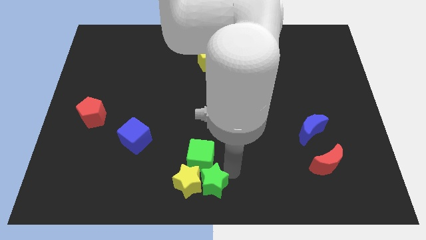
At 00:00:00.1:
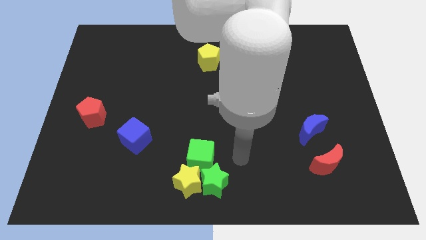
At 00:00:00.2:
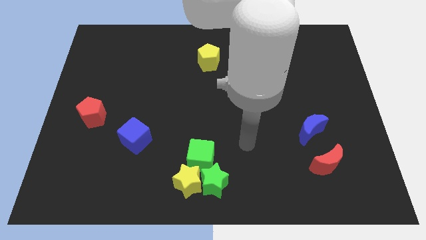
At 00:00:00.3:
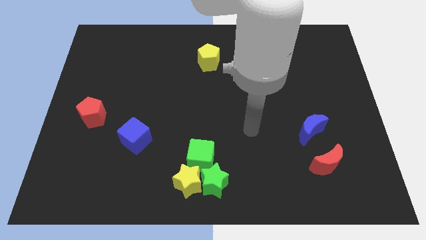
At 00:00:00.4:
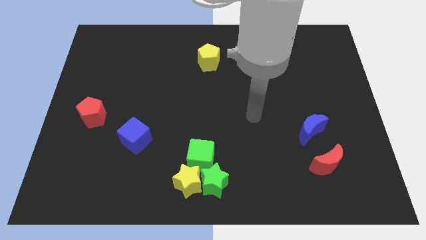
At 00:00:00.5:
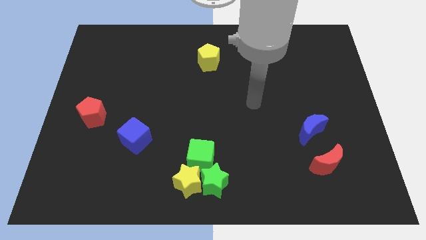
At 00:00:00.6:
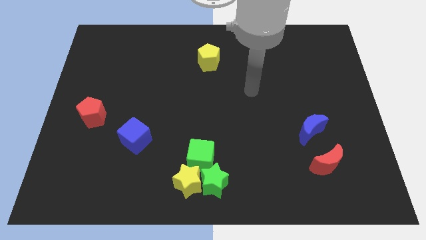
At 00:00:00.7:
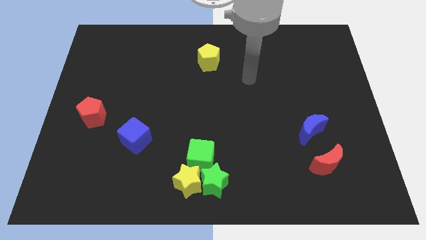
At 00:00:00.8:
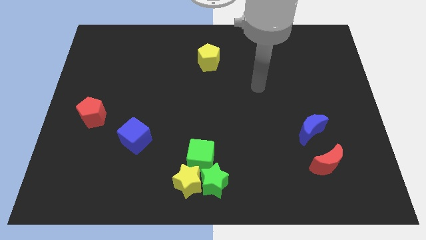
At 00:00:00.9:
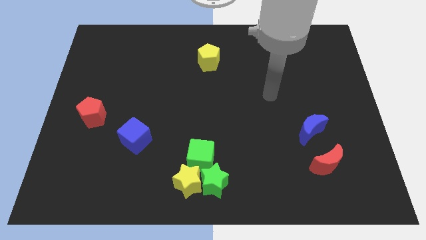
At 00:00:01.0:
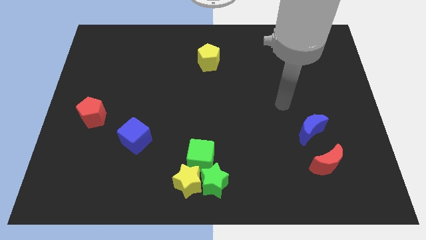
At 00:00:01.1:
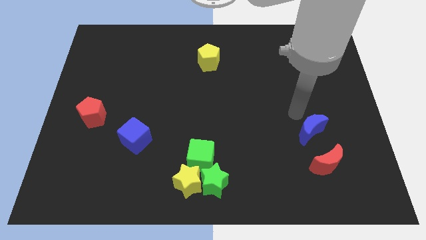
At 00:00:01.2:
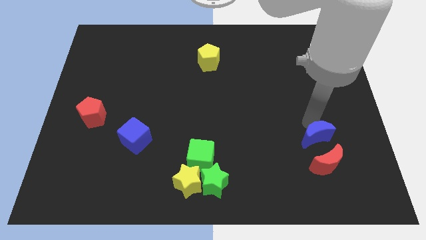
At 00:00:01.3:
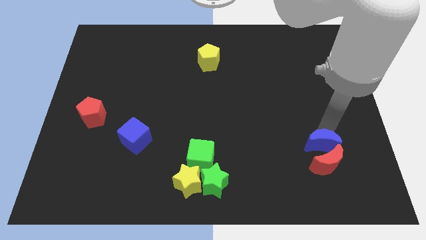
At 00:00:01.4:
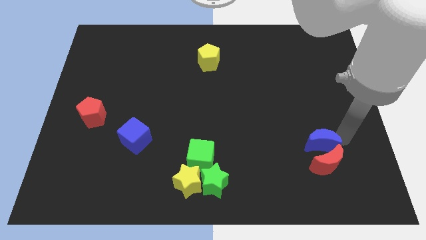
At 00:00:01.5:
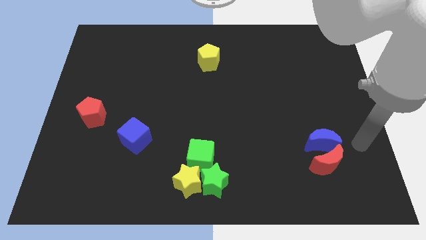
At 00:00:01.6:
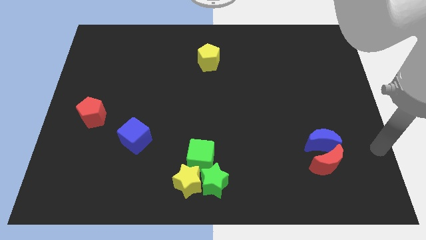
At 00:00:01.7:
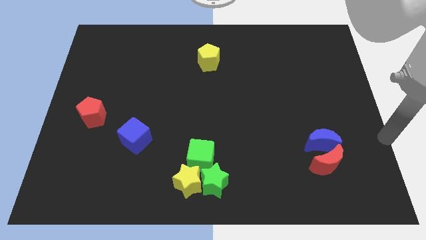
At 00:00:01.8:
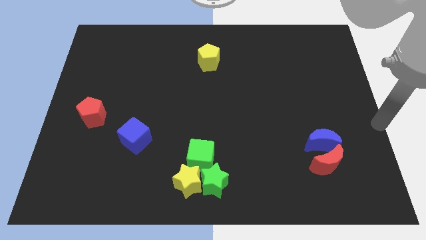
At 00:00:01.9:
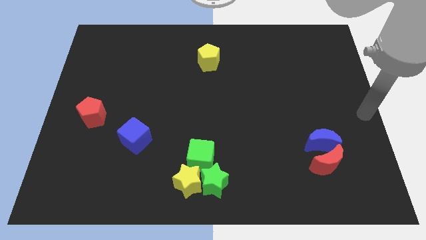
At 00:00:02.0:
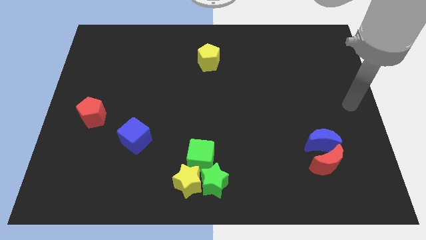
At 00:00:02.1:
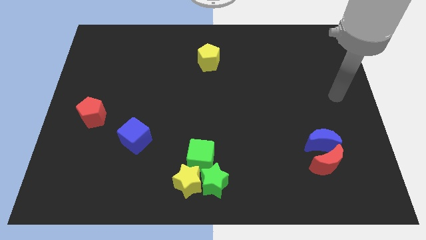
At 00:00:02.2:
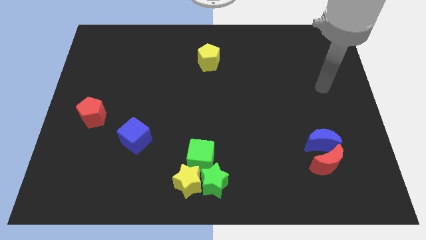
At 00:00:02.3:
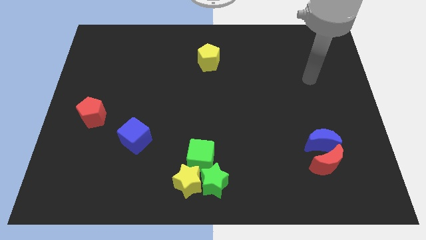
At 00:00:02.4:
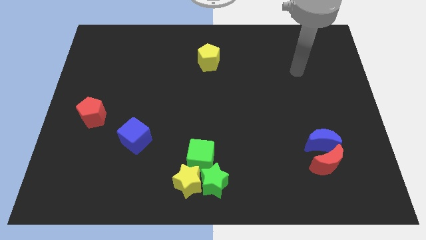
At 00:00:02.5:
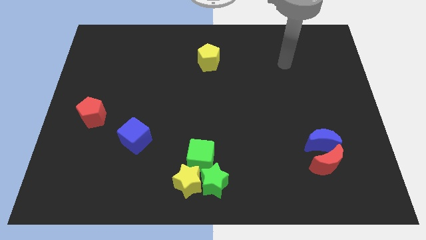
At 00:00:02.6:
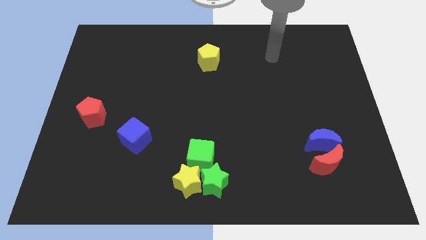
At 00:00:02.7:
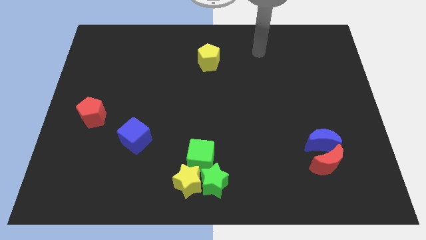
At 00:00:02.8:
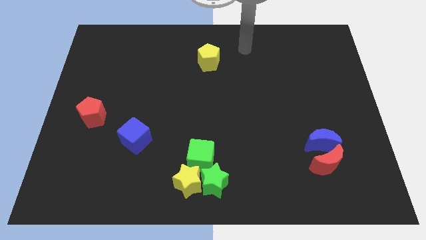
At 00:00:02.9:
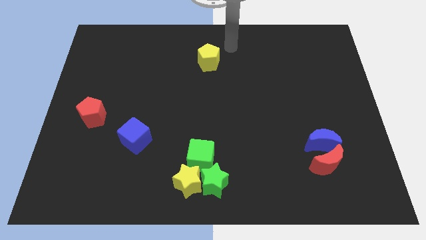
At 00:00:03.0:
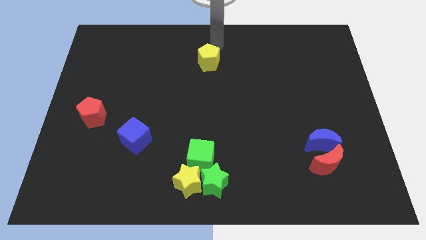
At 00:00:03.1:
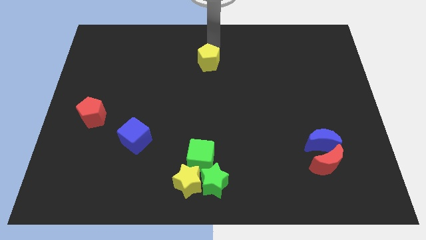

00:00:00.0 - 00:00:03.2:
push the blue crescent towards the red crescent

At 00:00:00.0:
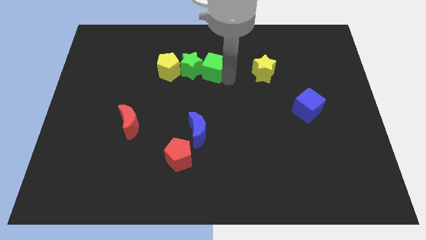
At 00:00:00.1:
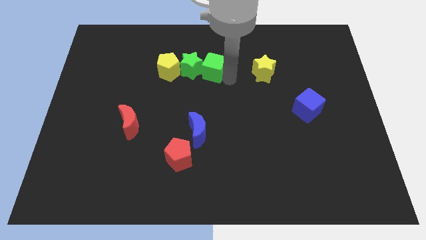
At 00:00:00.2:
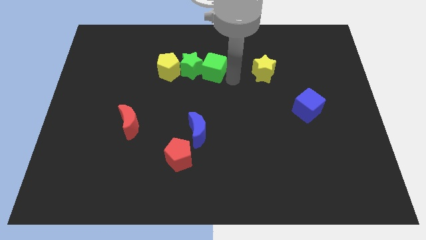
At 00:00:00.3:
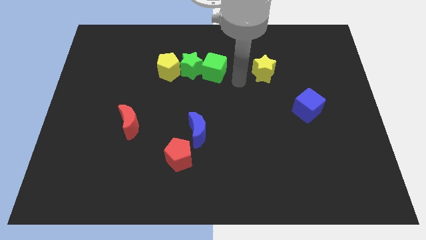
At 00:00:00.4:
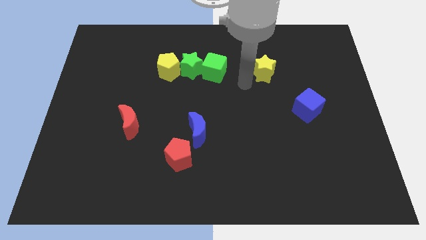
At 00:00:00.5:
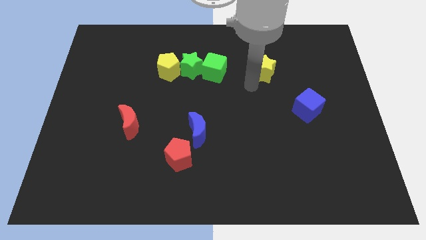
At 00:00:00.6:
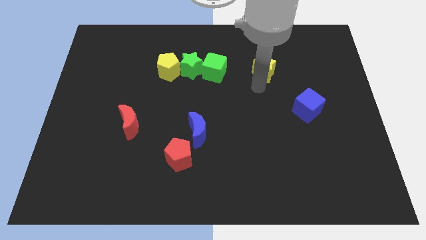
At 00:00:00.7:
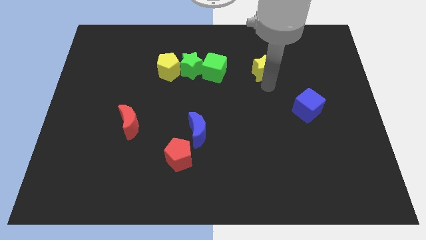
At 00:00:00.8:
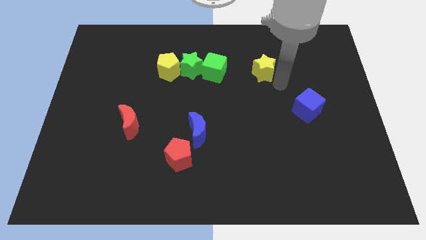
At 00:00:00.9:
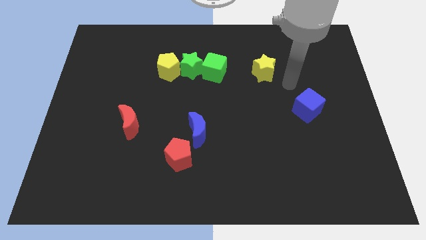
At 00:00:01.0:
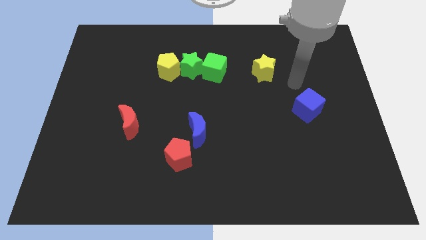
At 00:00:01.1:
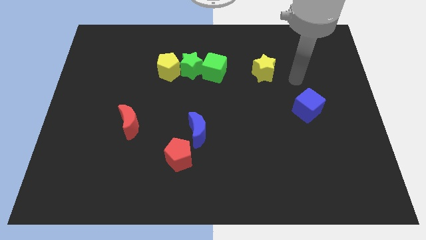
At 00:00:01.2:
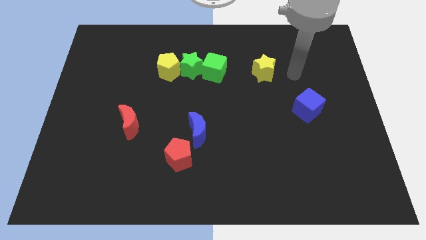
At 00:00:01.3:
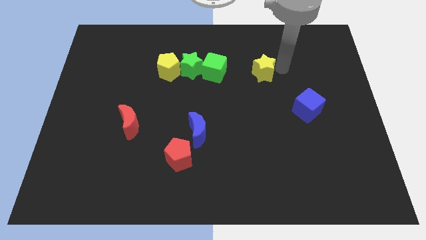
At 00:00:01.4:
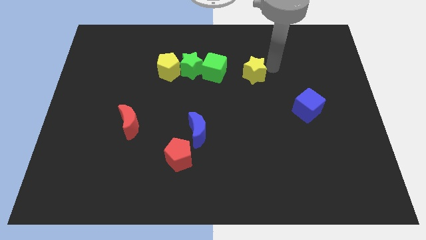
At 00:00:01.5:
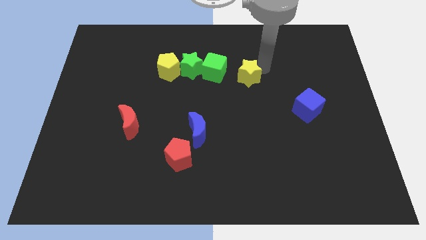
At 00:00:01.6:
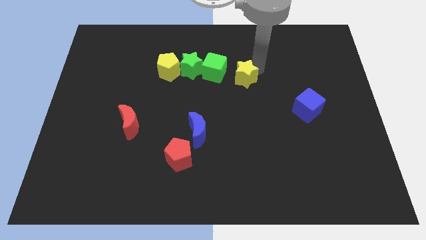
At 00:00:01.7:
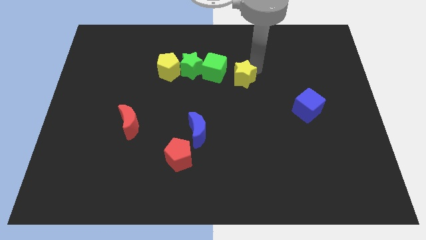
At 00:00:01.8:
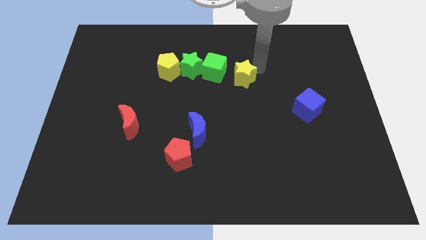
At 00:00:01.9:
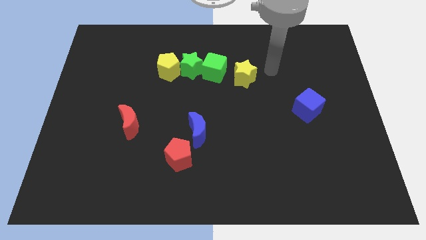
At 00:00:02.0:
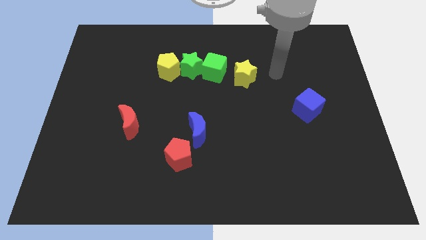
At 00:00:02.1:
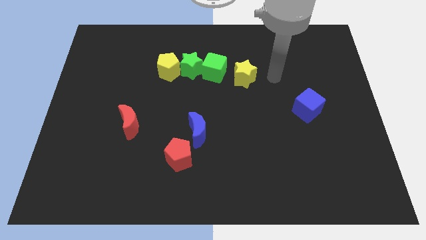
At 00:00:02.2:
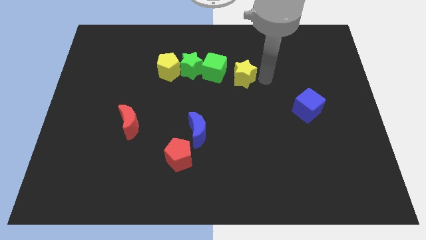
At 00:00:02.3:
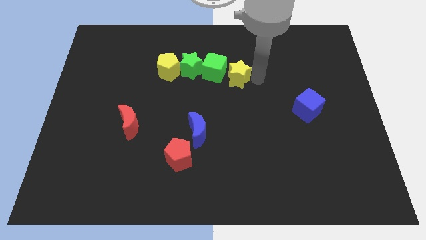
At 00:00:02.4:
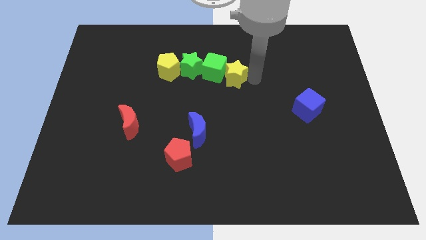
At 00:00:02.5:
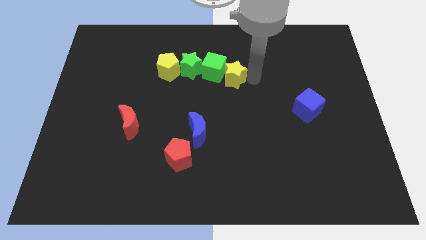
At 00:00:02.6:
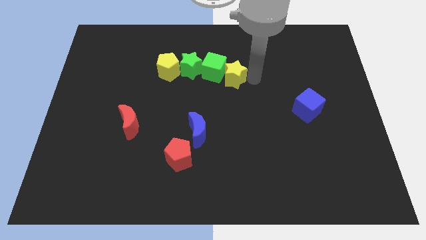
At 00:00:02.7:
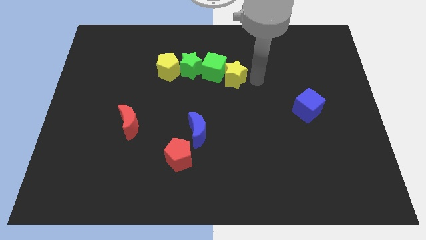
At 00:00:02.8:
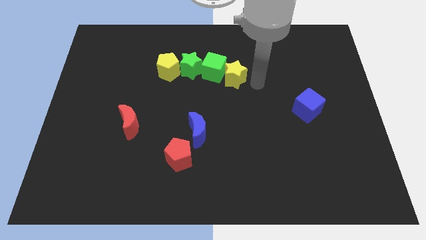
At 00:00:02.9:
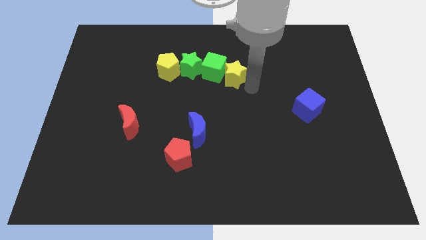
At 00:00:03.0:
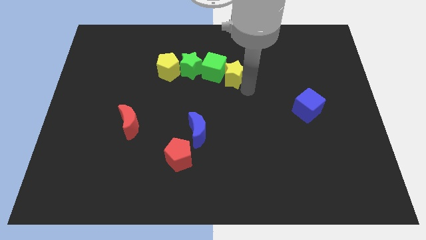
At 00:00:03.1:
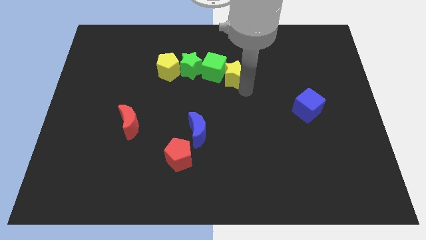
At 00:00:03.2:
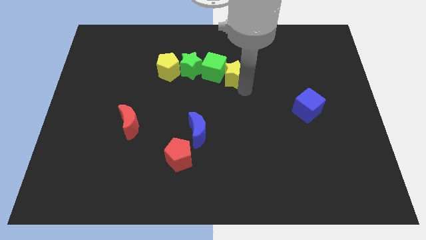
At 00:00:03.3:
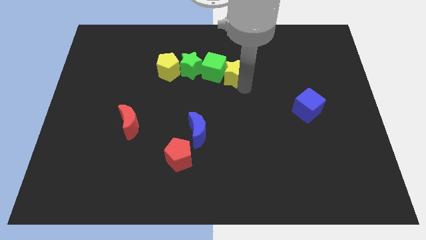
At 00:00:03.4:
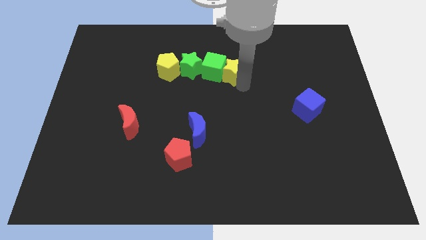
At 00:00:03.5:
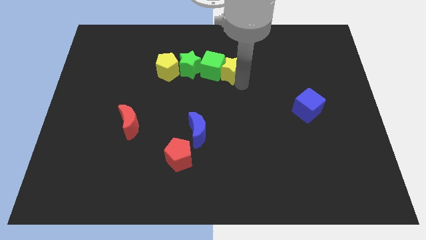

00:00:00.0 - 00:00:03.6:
slide the yellow star into the right side of the green cube

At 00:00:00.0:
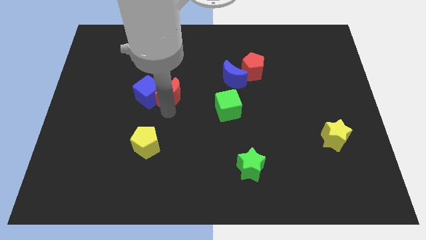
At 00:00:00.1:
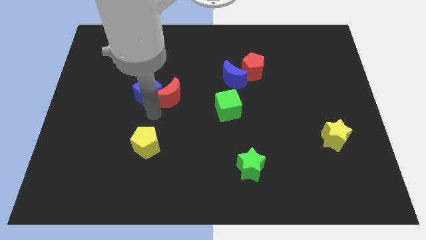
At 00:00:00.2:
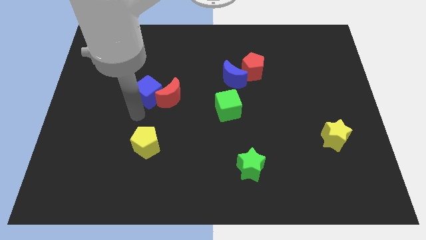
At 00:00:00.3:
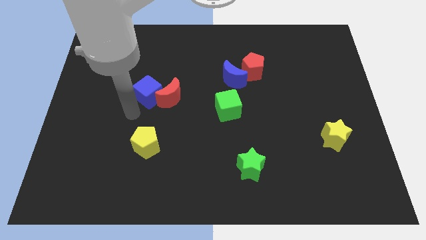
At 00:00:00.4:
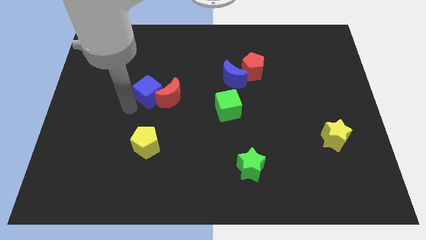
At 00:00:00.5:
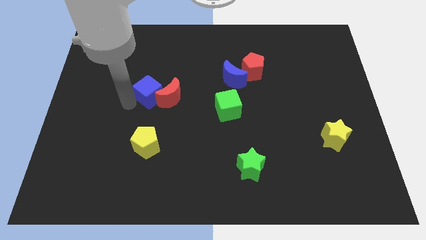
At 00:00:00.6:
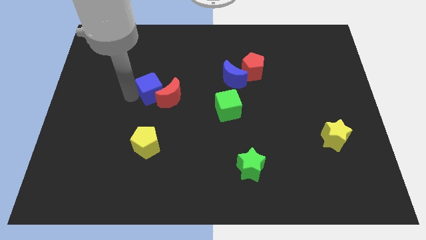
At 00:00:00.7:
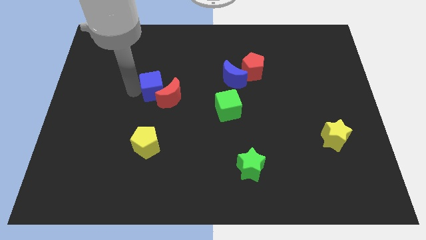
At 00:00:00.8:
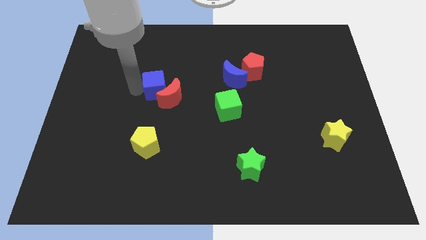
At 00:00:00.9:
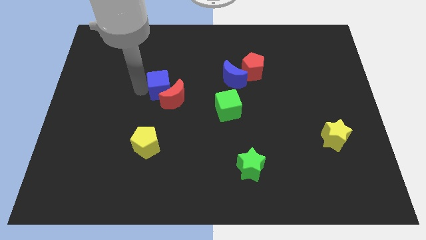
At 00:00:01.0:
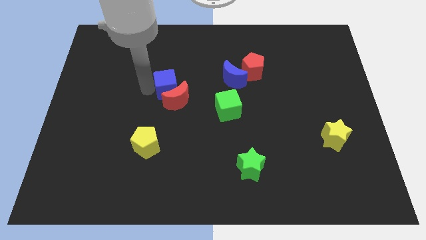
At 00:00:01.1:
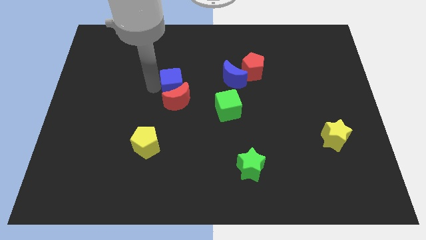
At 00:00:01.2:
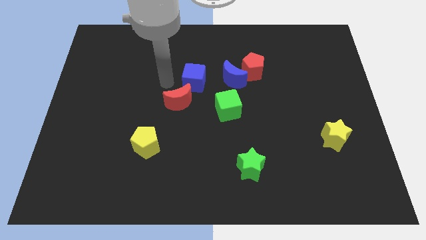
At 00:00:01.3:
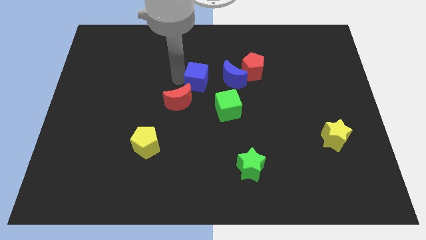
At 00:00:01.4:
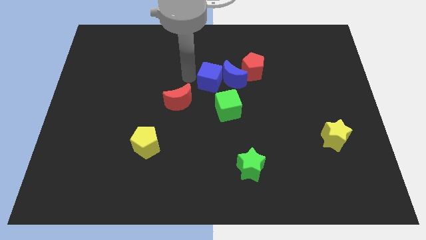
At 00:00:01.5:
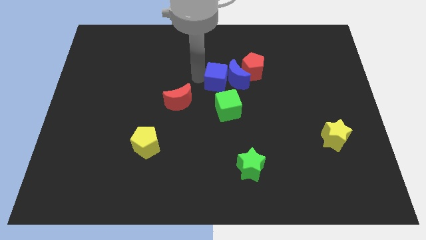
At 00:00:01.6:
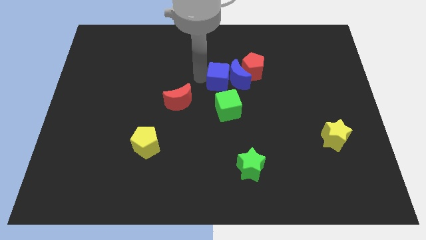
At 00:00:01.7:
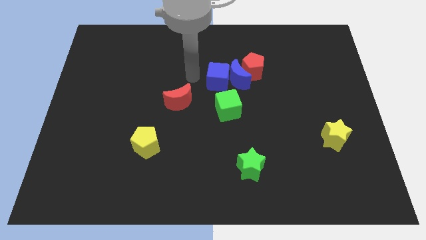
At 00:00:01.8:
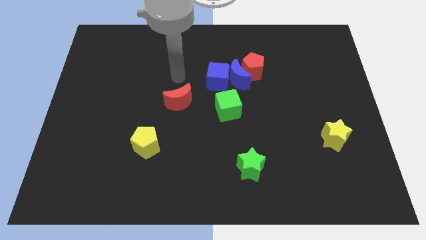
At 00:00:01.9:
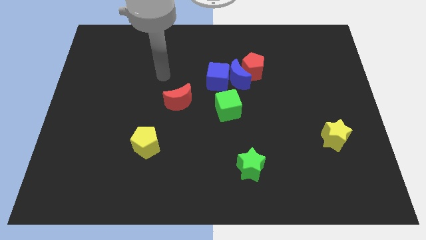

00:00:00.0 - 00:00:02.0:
move the blue cube into the blue moon

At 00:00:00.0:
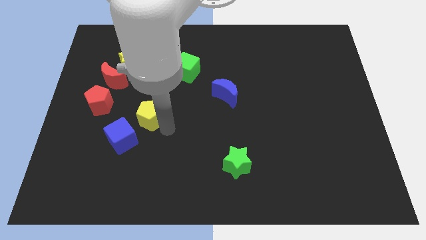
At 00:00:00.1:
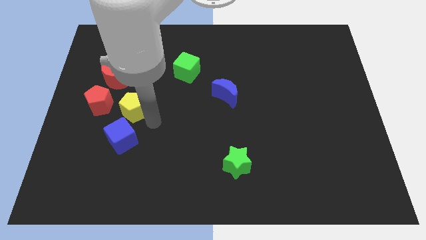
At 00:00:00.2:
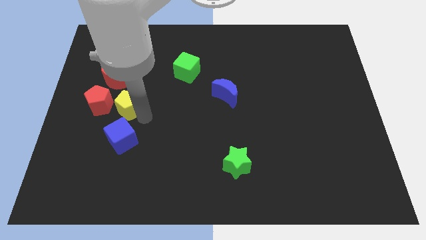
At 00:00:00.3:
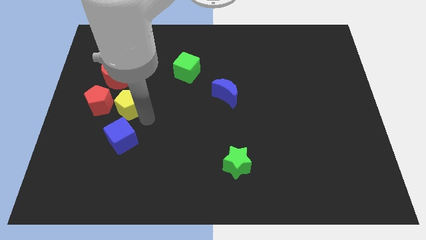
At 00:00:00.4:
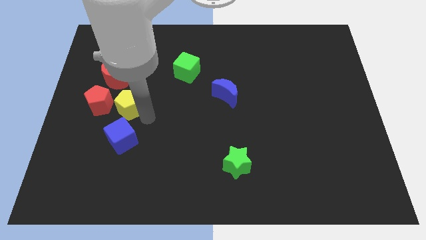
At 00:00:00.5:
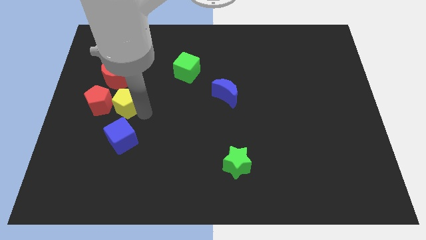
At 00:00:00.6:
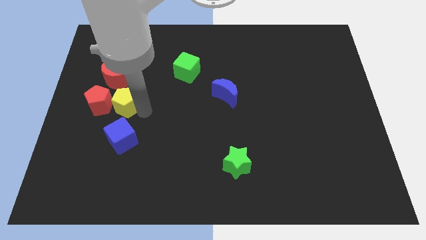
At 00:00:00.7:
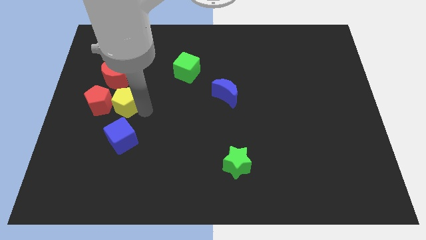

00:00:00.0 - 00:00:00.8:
put the yellow pentagon to the right side of red pentagon
